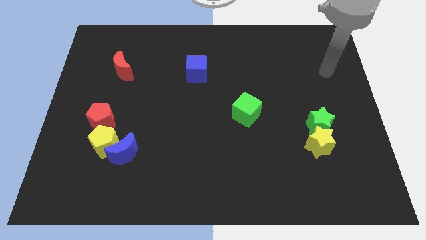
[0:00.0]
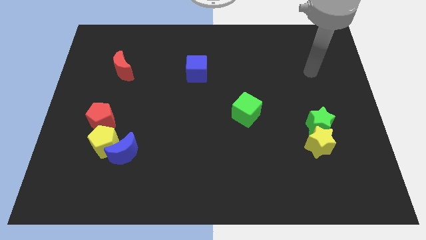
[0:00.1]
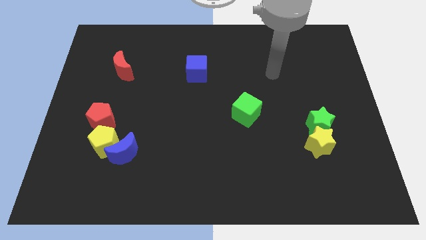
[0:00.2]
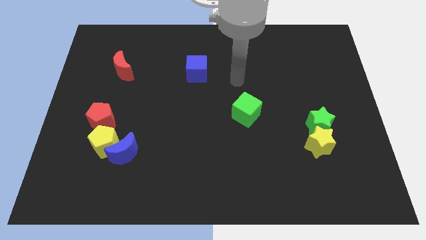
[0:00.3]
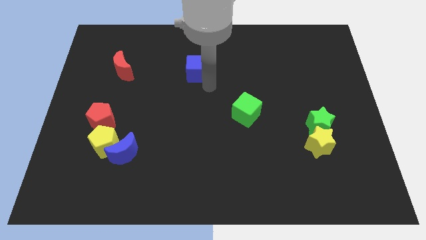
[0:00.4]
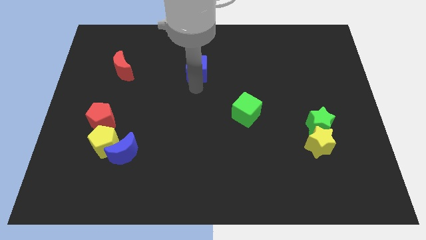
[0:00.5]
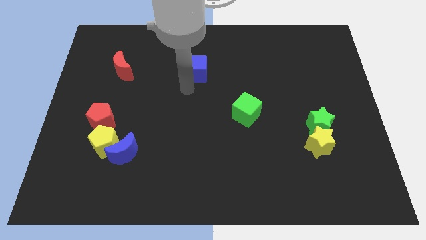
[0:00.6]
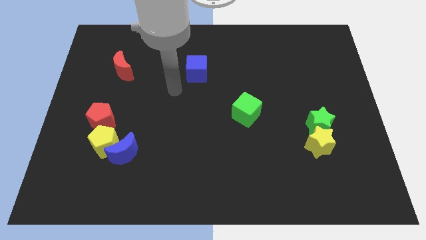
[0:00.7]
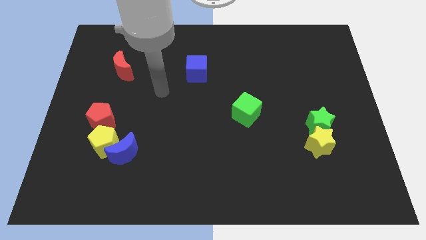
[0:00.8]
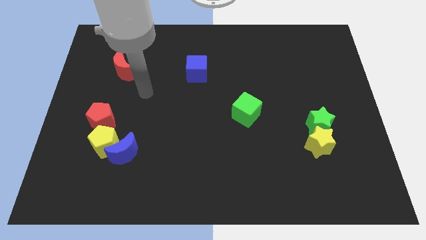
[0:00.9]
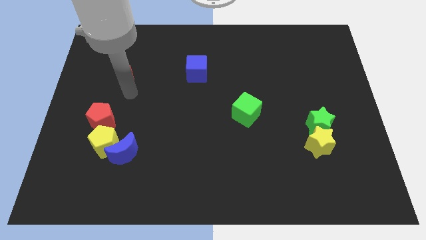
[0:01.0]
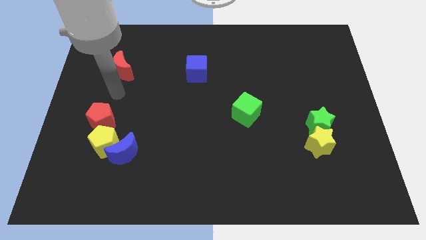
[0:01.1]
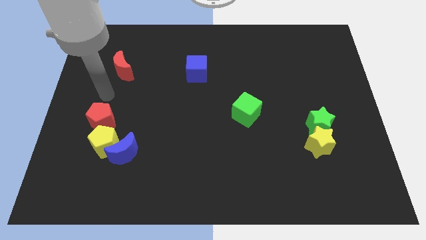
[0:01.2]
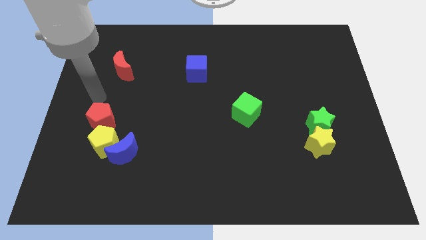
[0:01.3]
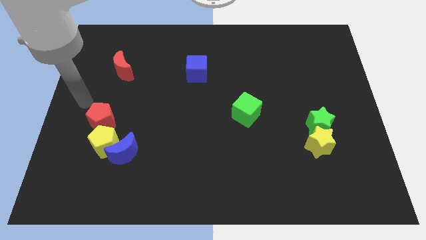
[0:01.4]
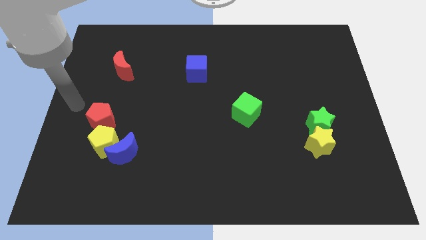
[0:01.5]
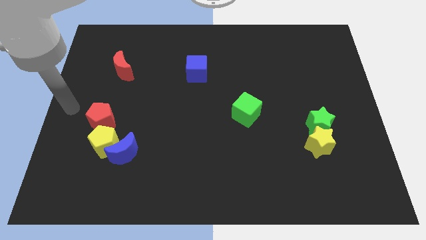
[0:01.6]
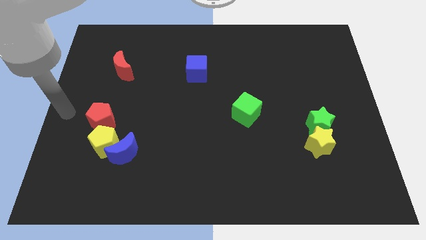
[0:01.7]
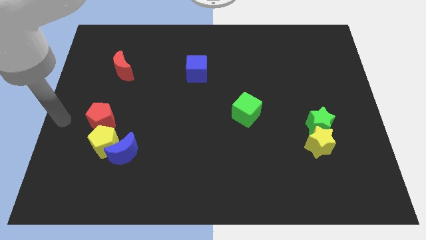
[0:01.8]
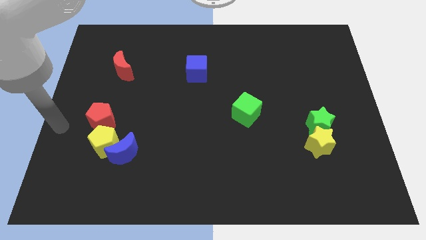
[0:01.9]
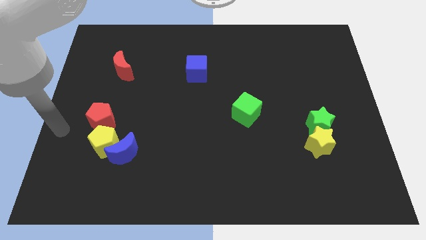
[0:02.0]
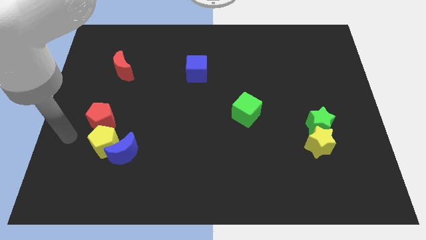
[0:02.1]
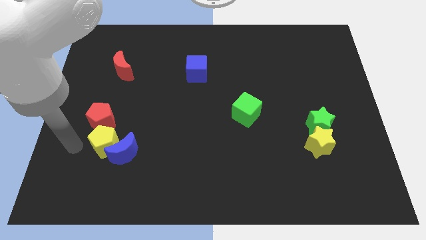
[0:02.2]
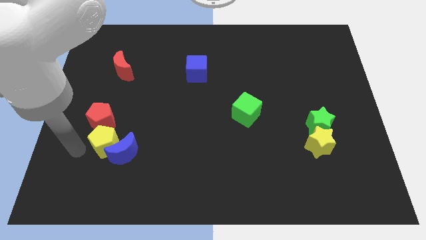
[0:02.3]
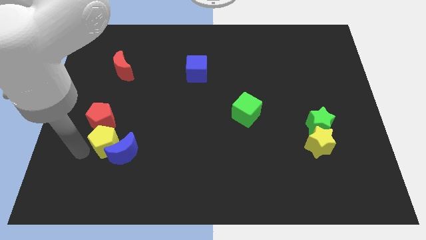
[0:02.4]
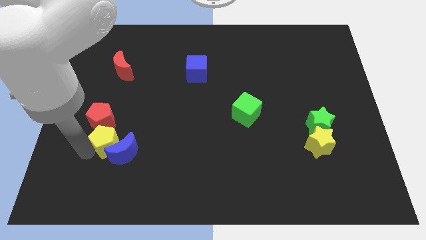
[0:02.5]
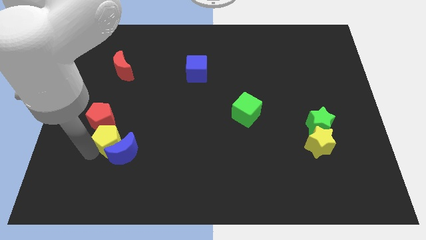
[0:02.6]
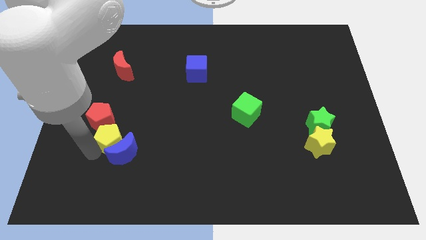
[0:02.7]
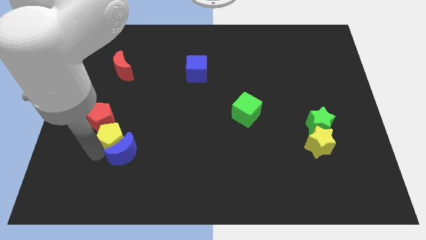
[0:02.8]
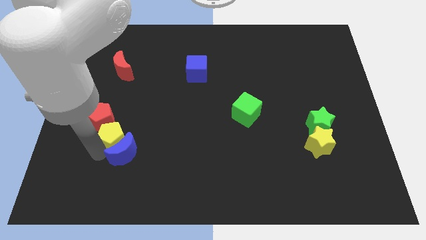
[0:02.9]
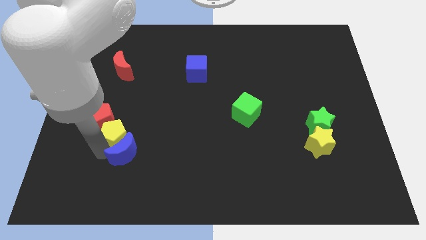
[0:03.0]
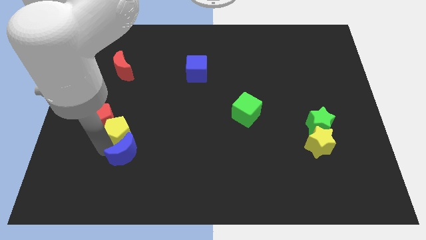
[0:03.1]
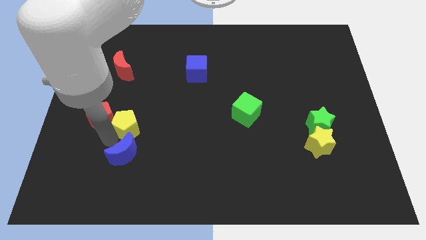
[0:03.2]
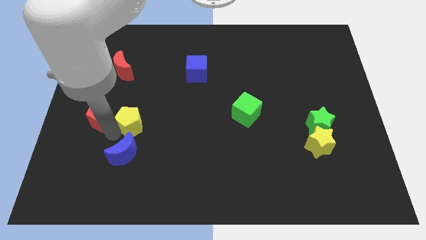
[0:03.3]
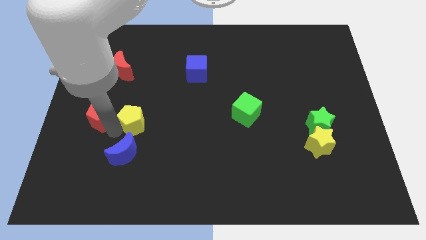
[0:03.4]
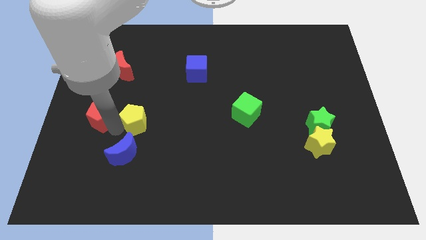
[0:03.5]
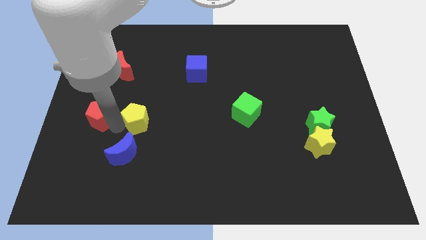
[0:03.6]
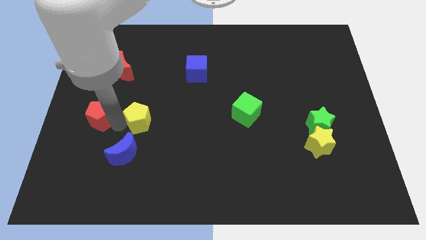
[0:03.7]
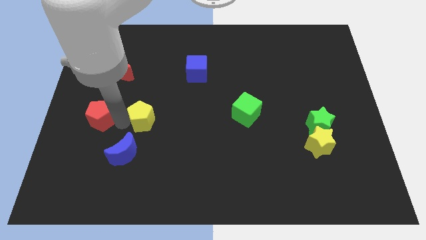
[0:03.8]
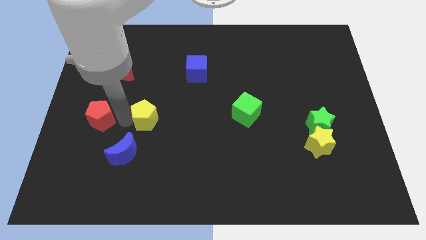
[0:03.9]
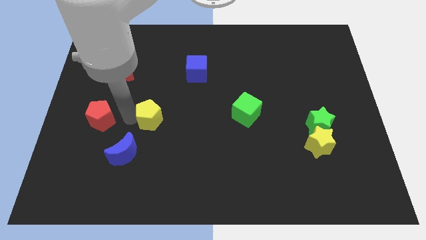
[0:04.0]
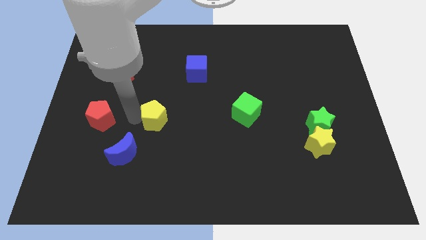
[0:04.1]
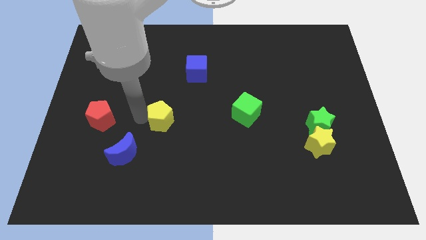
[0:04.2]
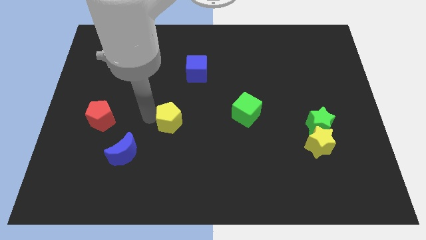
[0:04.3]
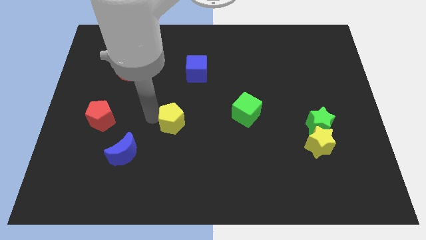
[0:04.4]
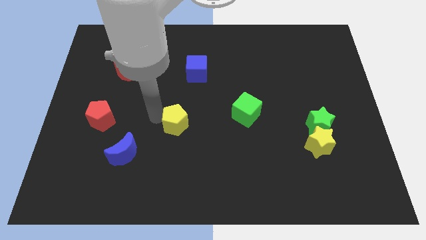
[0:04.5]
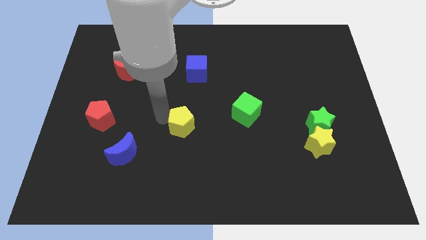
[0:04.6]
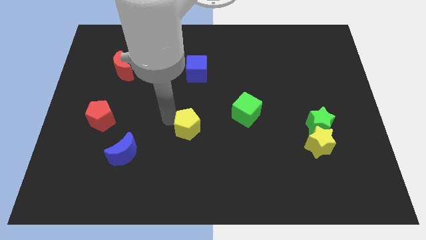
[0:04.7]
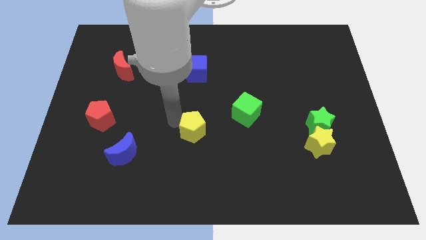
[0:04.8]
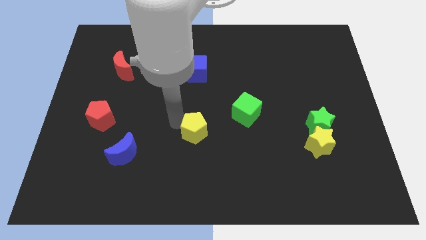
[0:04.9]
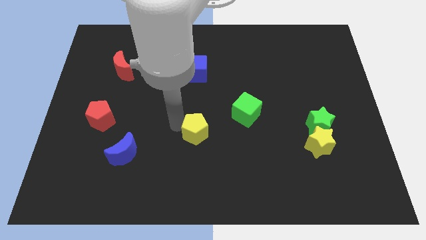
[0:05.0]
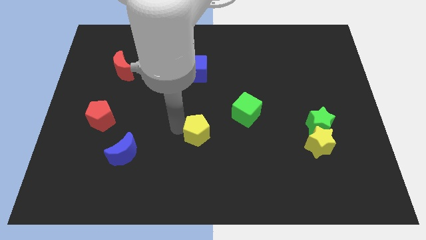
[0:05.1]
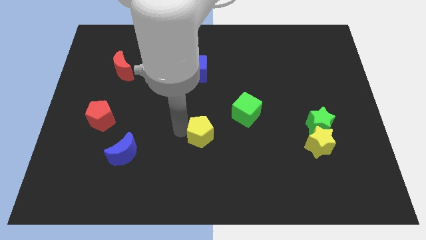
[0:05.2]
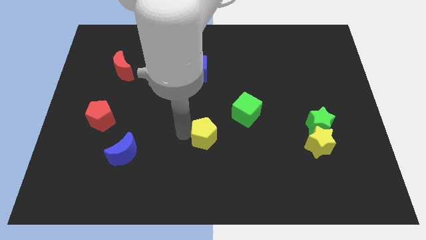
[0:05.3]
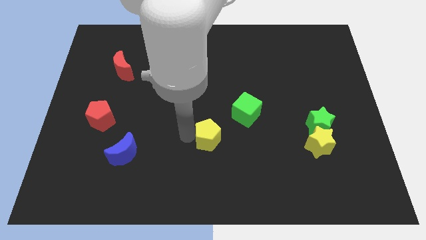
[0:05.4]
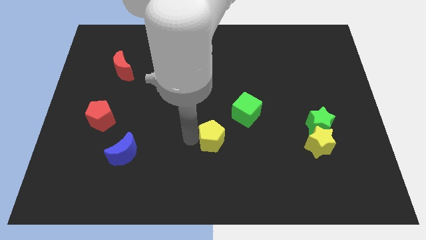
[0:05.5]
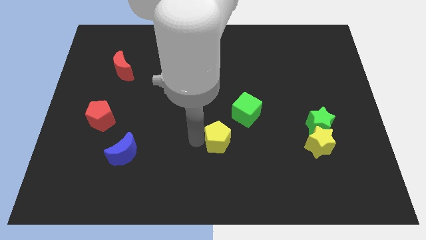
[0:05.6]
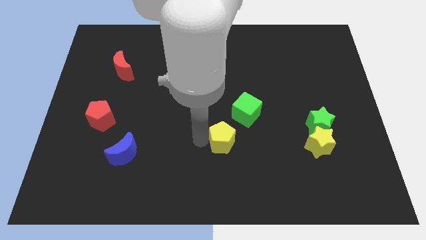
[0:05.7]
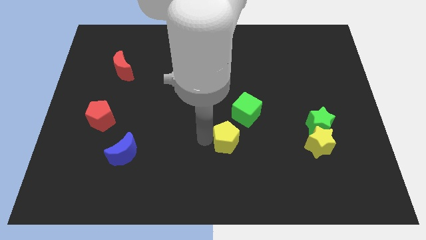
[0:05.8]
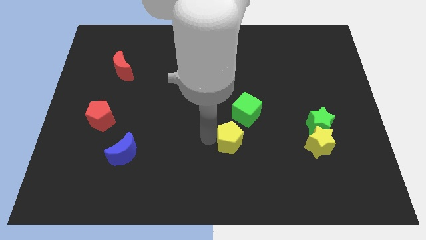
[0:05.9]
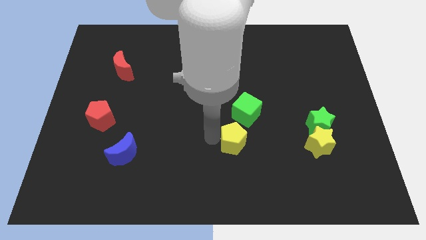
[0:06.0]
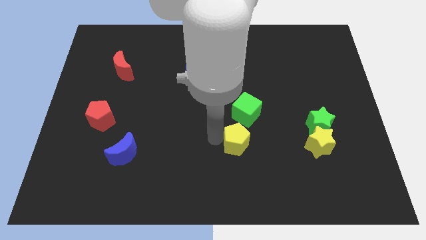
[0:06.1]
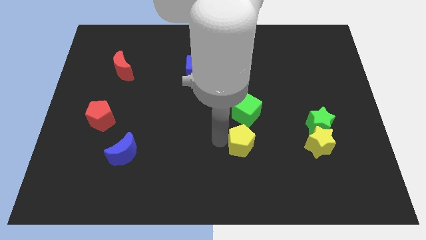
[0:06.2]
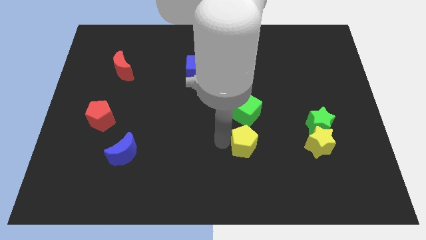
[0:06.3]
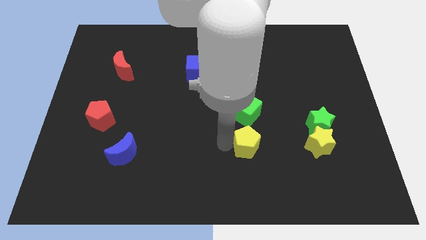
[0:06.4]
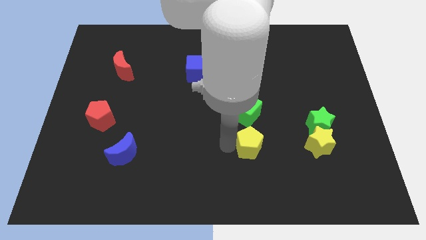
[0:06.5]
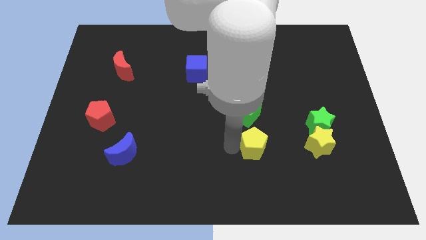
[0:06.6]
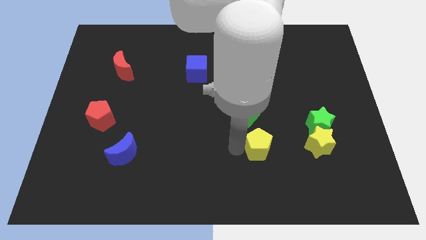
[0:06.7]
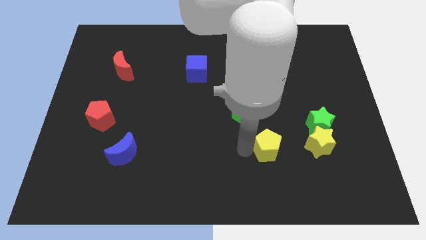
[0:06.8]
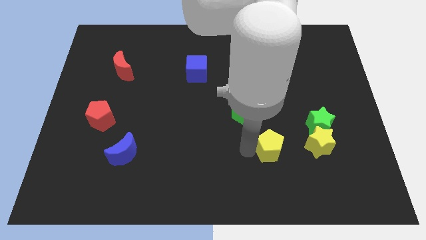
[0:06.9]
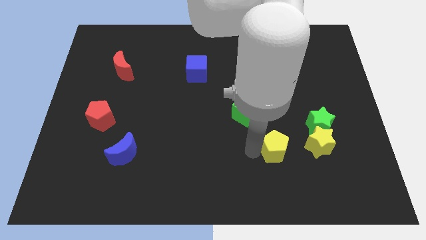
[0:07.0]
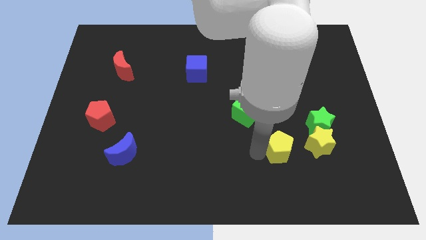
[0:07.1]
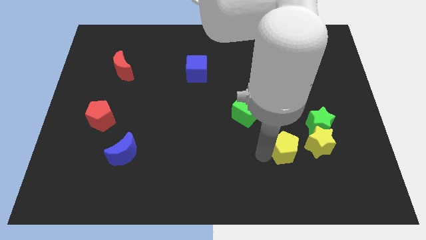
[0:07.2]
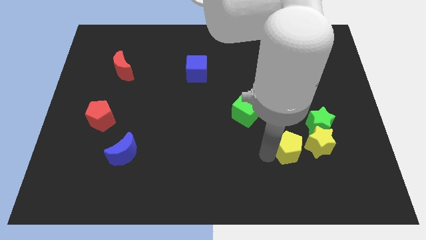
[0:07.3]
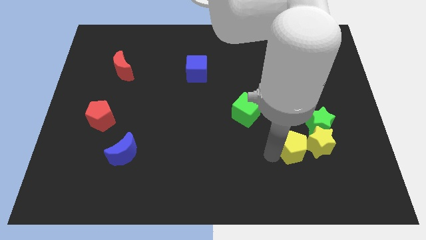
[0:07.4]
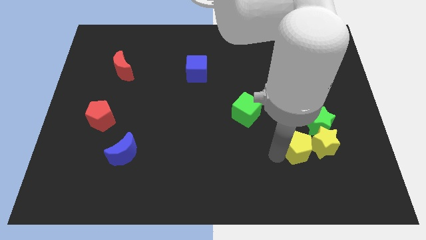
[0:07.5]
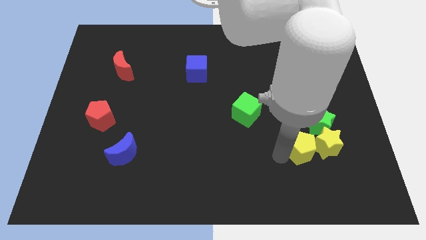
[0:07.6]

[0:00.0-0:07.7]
push the yellow pentagon next to the yellow star

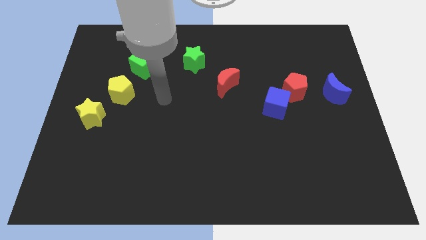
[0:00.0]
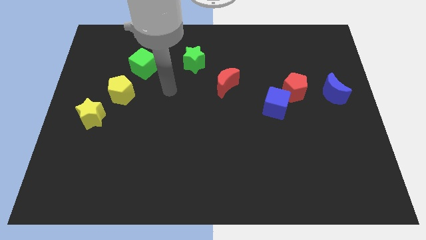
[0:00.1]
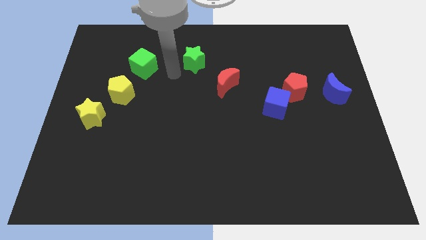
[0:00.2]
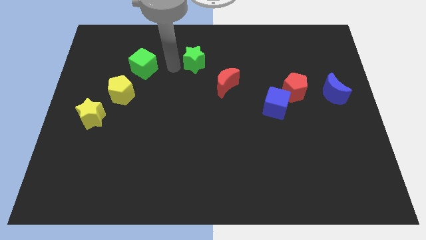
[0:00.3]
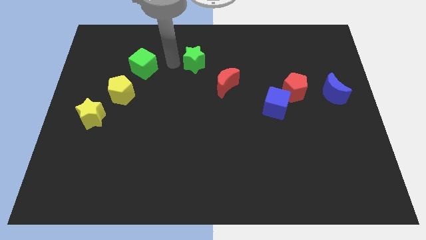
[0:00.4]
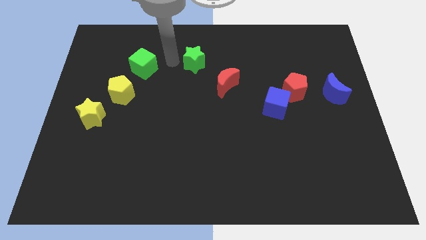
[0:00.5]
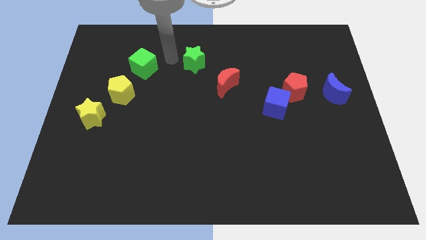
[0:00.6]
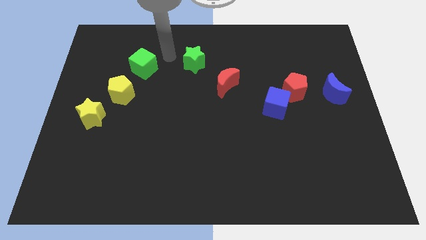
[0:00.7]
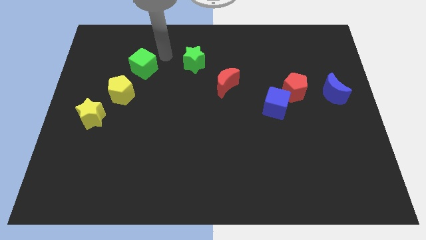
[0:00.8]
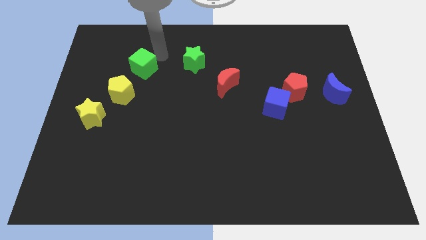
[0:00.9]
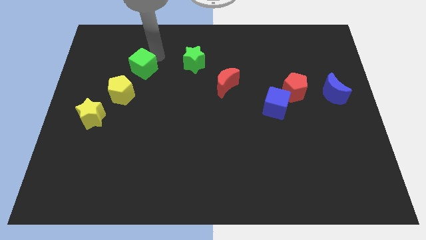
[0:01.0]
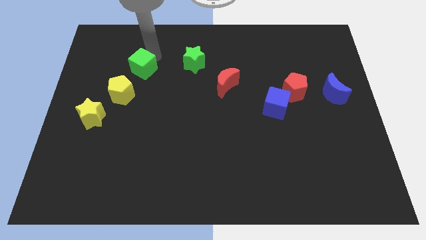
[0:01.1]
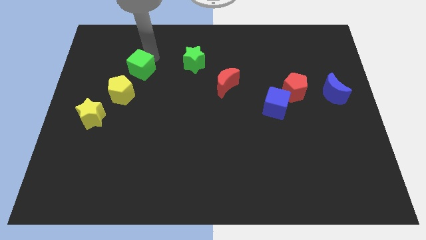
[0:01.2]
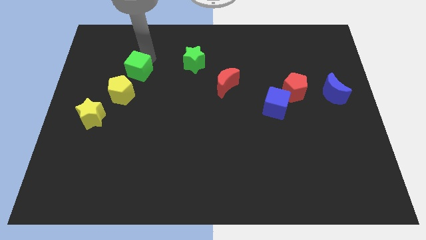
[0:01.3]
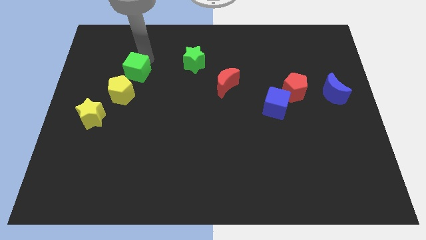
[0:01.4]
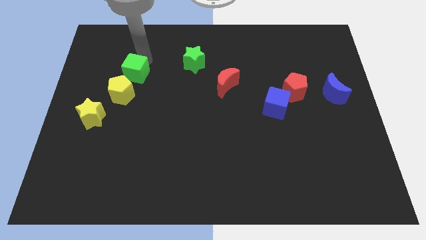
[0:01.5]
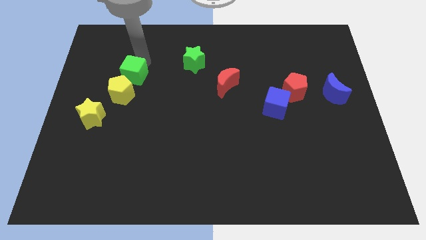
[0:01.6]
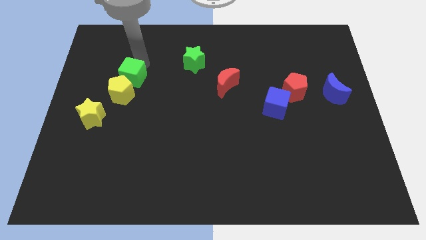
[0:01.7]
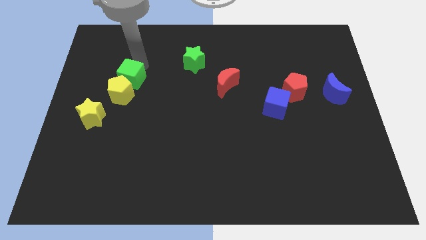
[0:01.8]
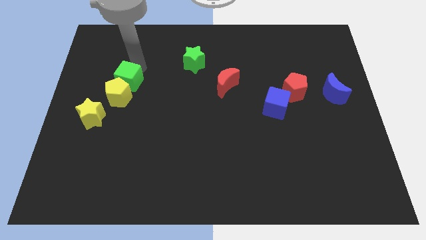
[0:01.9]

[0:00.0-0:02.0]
put the green cube next to the yellow pentagon
